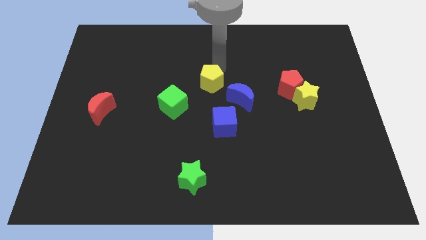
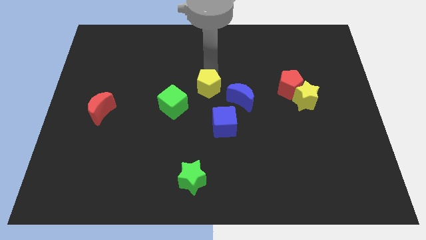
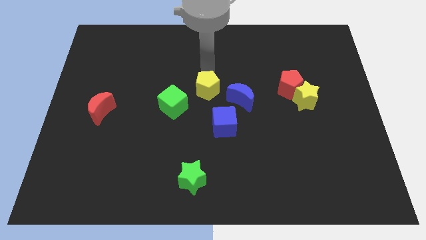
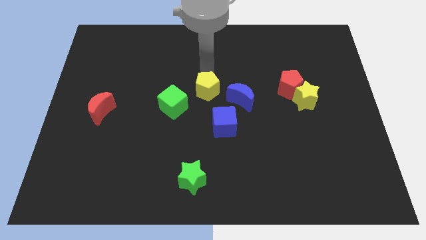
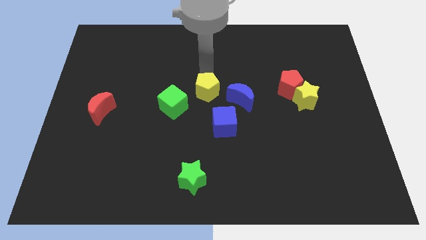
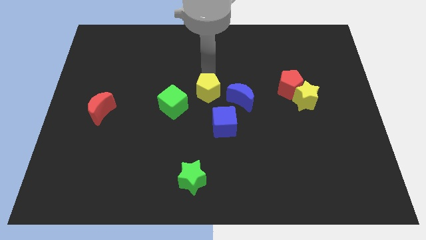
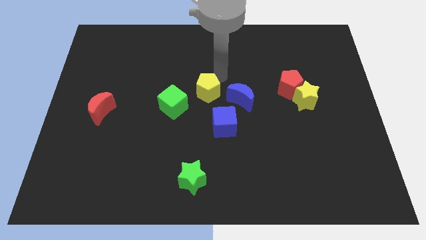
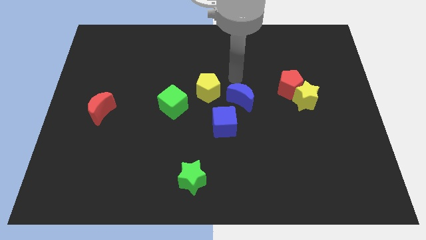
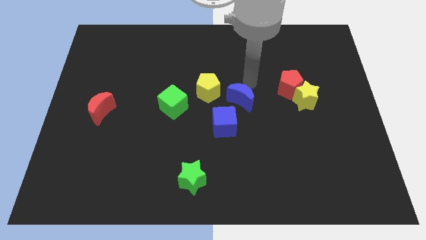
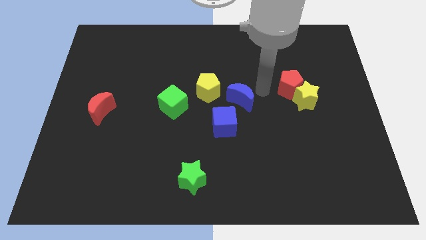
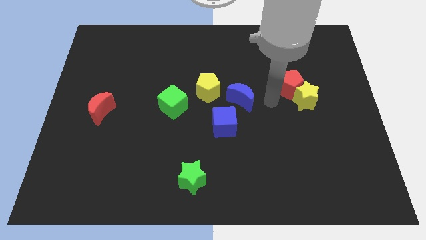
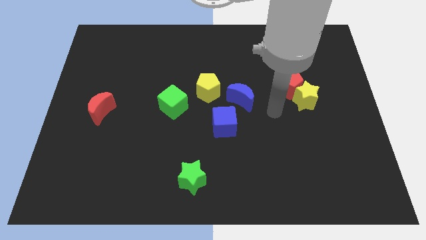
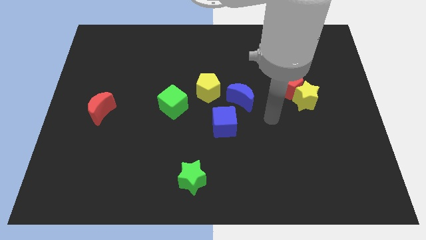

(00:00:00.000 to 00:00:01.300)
move the yellow pentagon in between the green cube and blue moon

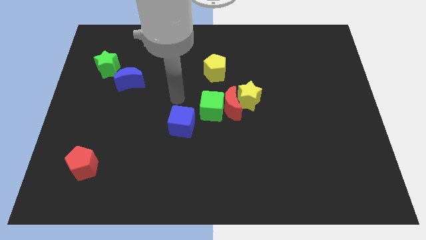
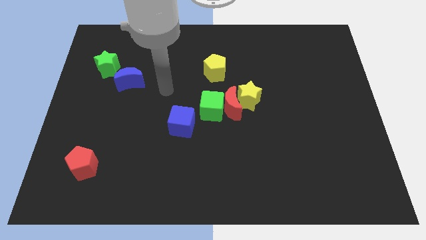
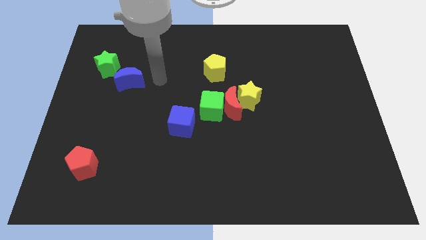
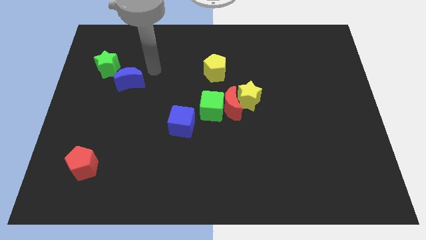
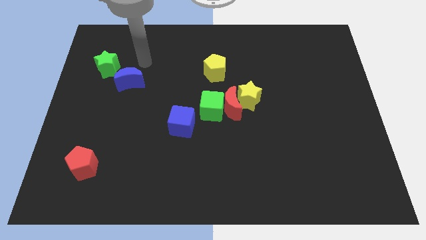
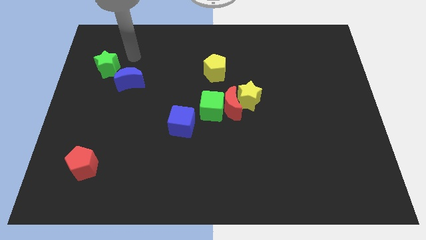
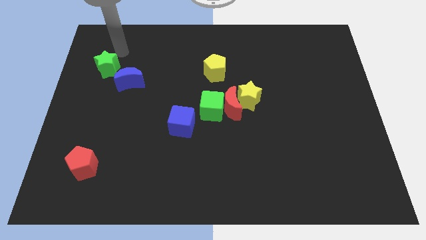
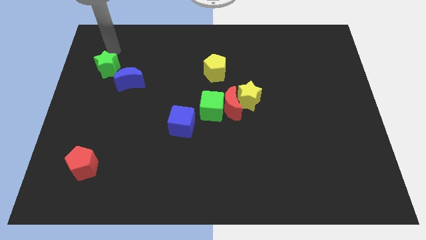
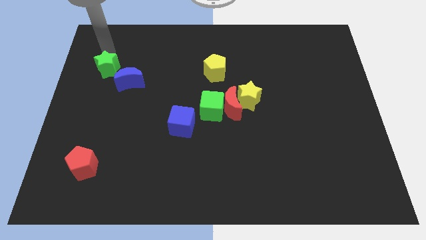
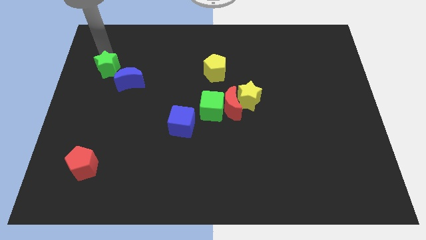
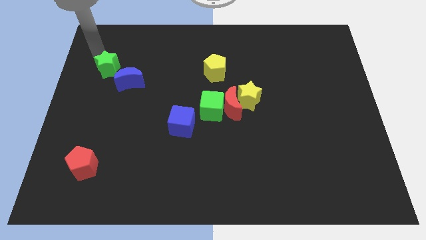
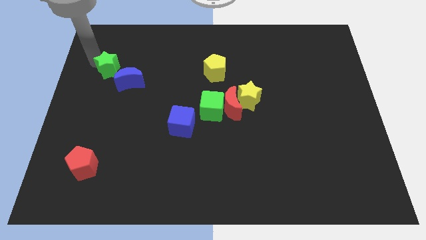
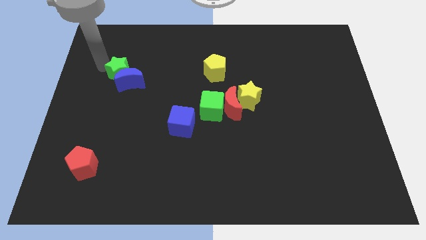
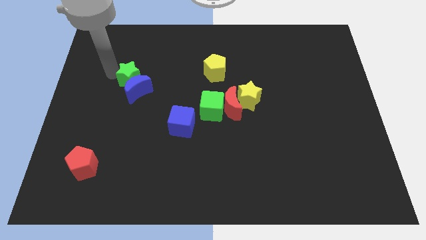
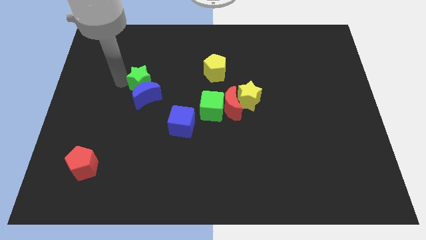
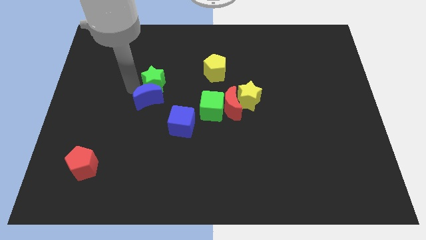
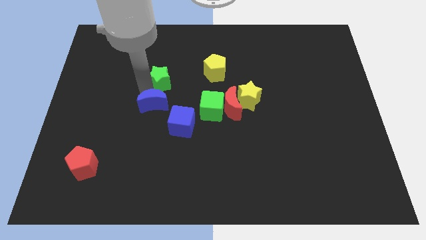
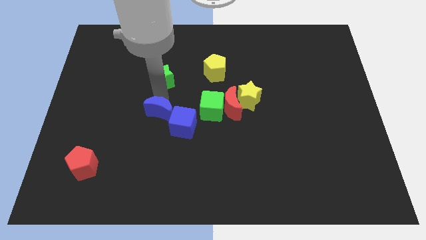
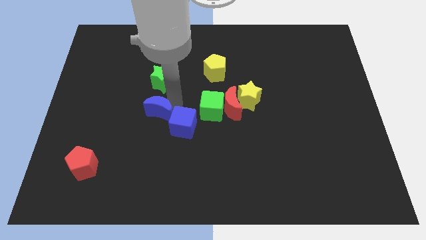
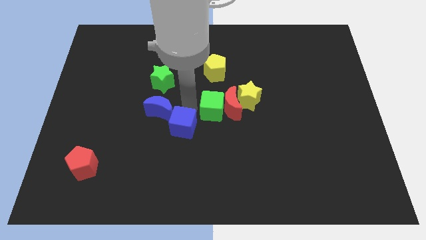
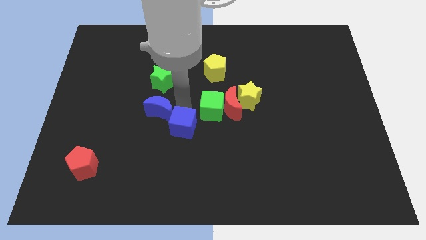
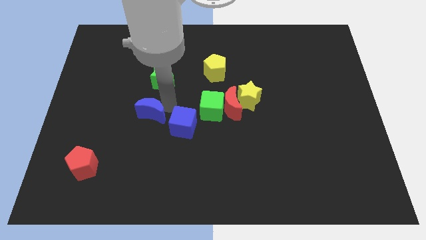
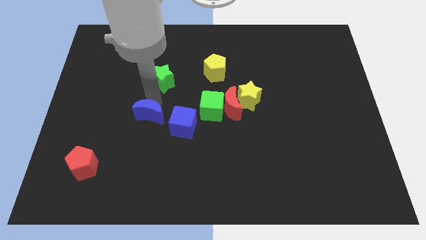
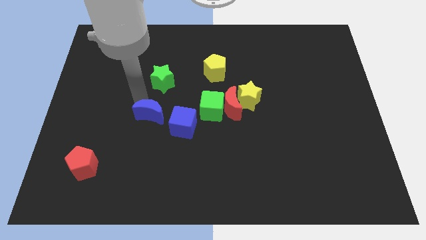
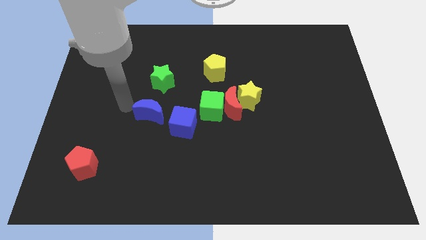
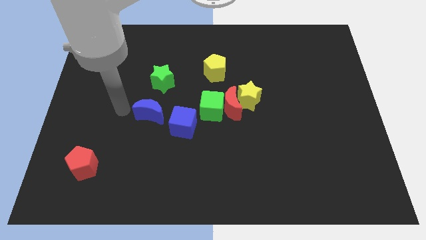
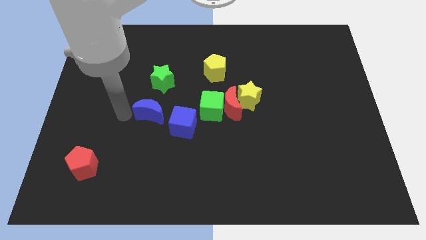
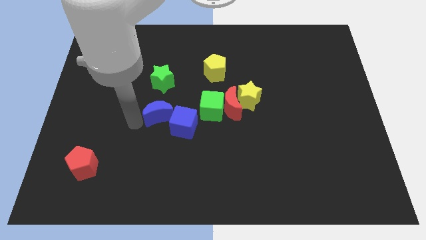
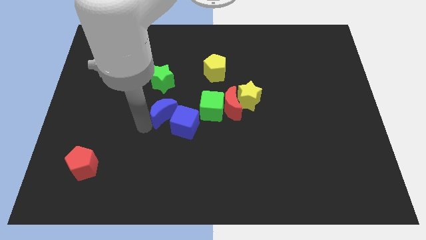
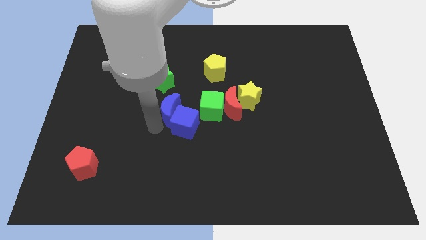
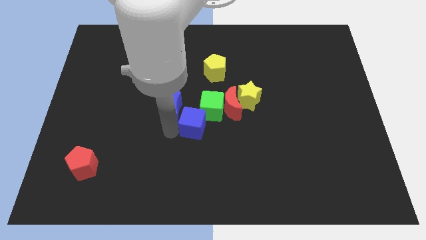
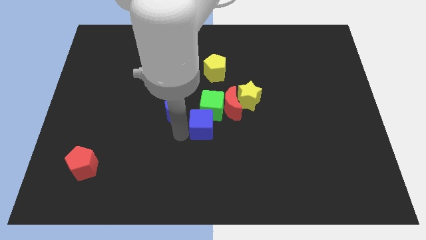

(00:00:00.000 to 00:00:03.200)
separate blue moon from the green star

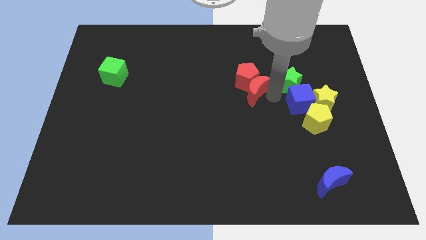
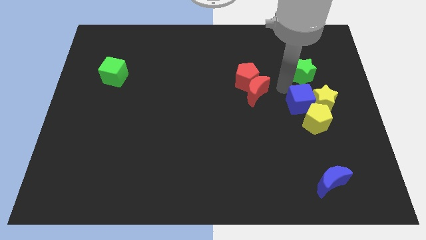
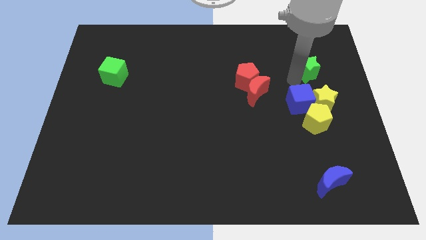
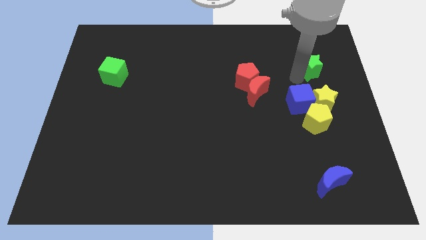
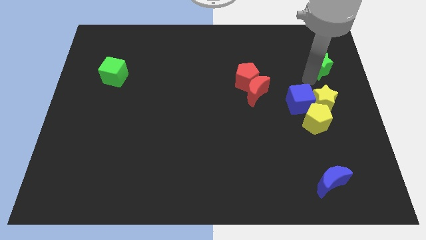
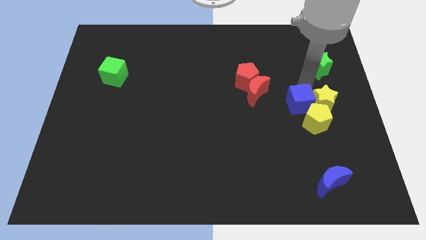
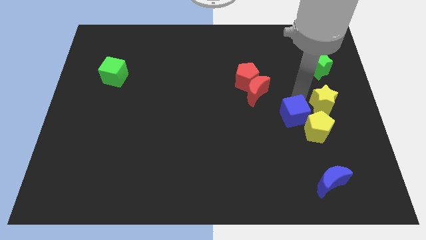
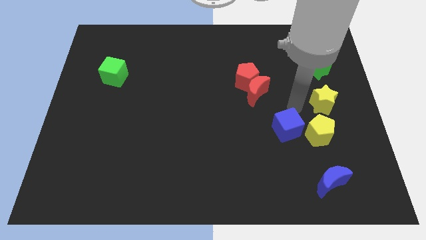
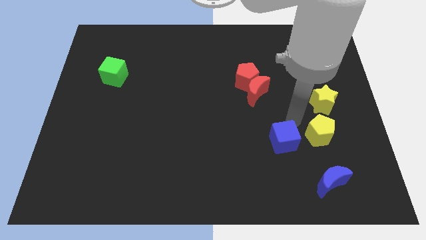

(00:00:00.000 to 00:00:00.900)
move the green star to the top right

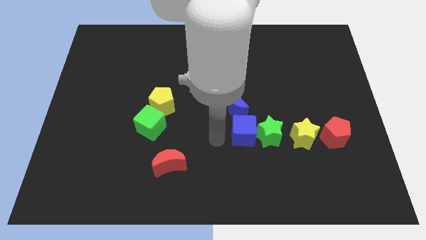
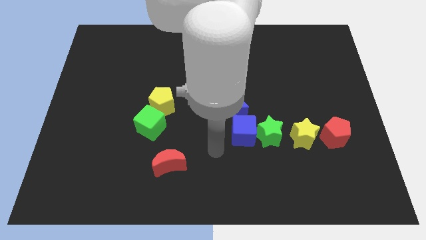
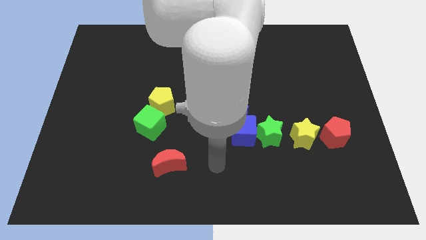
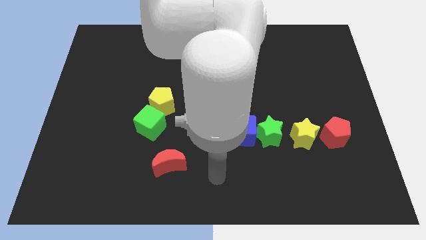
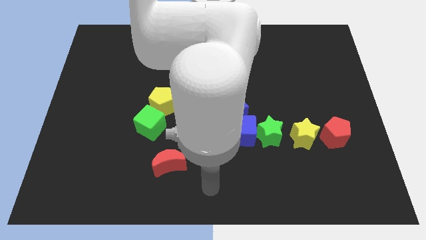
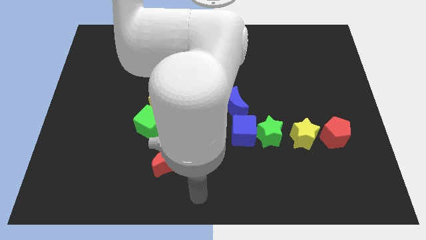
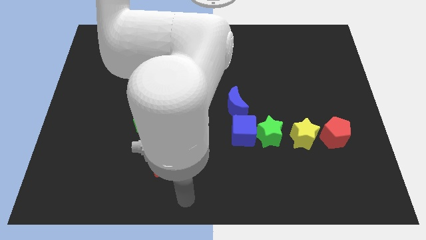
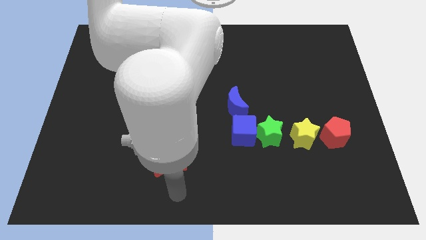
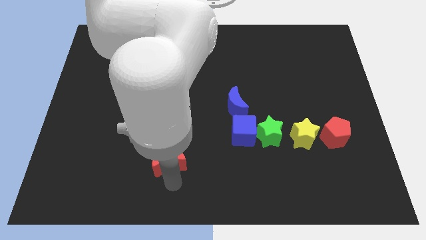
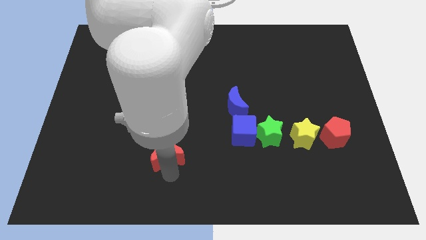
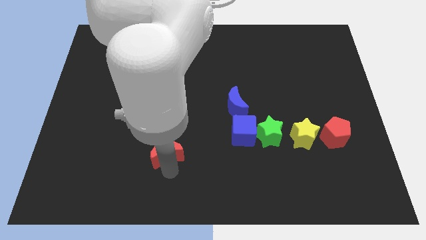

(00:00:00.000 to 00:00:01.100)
touch the bottom of red moon

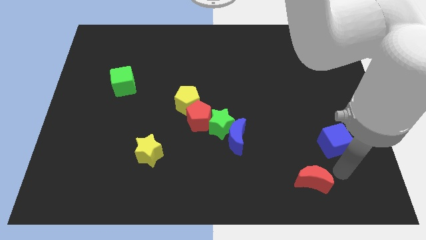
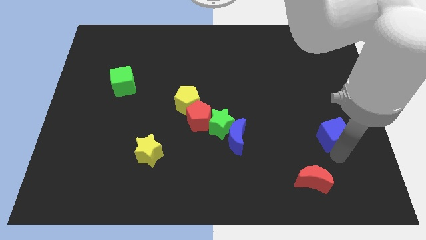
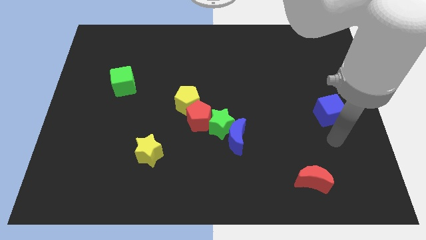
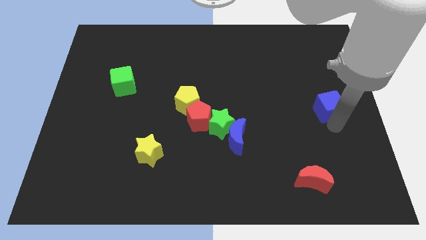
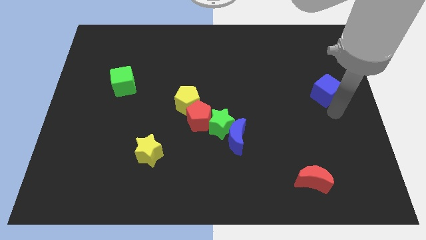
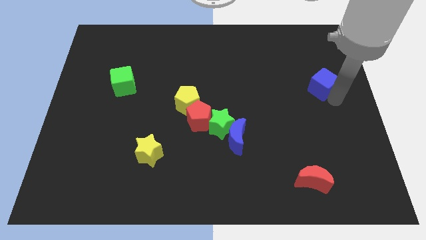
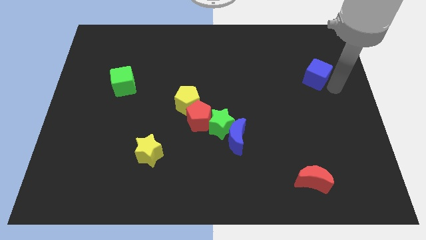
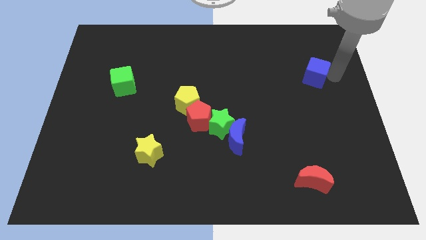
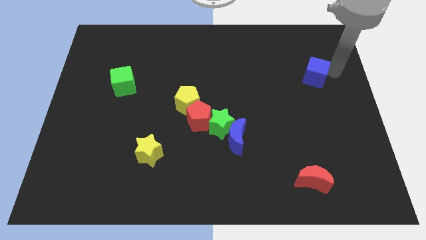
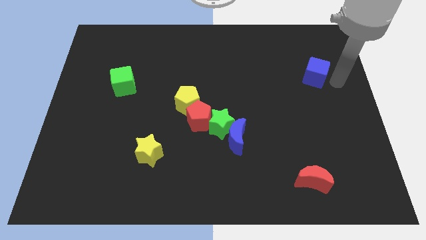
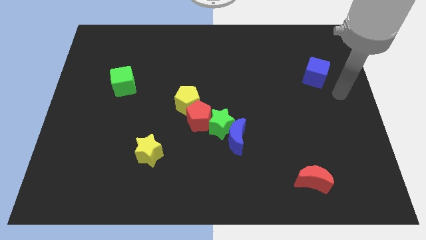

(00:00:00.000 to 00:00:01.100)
push the blue cube upwards

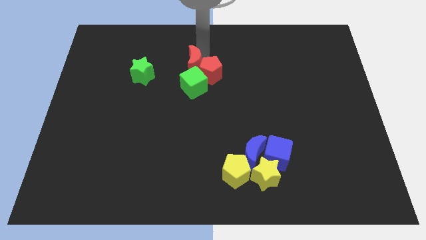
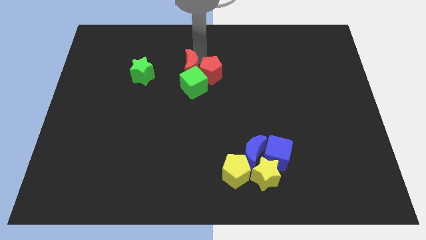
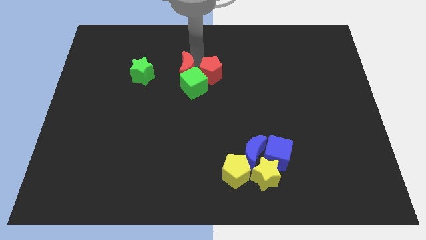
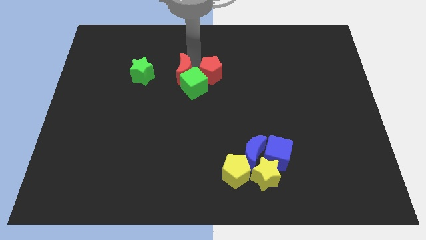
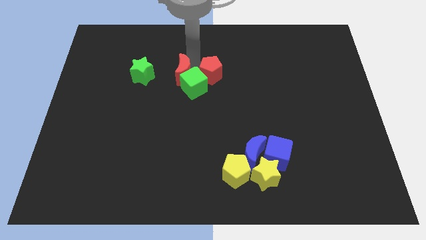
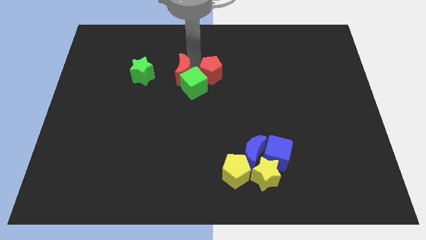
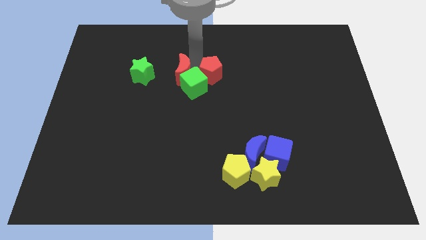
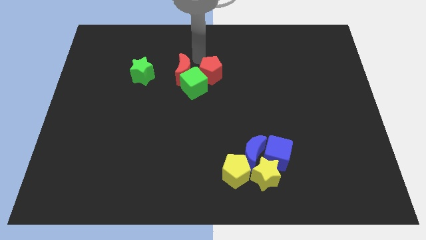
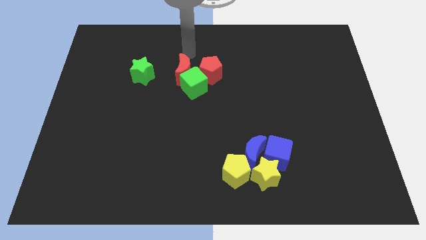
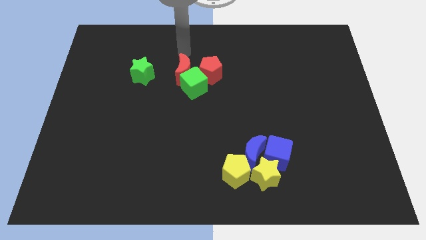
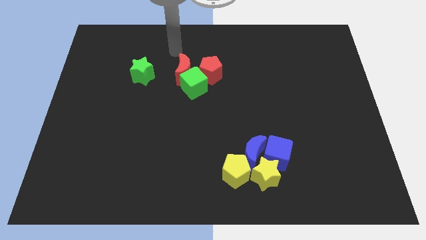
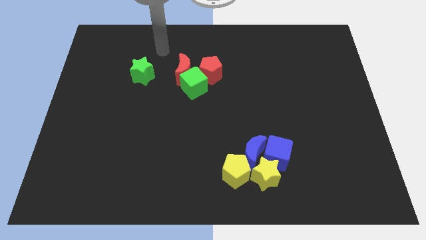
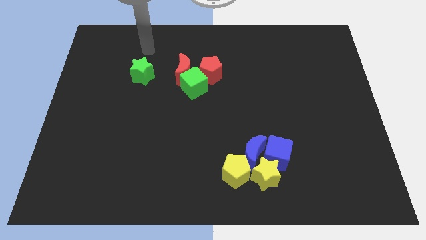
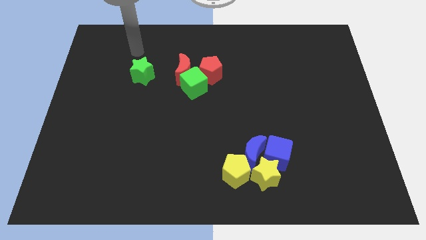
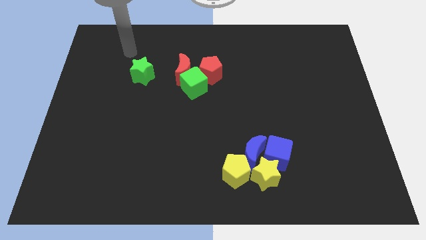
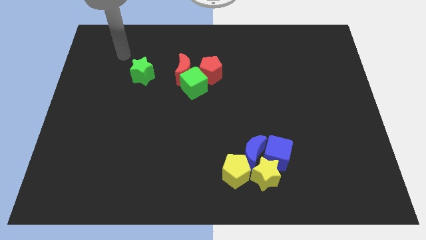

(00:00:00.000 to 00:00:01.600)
slightly move the red crescent towards the green cube
